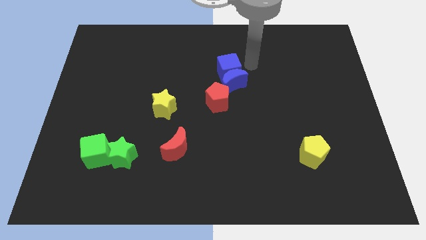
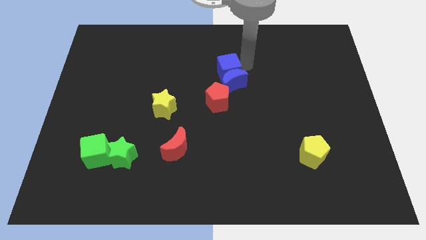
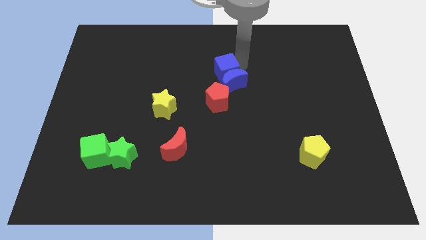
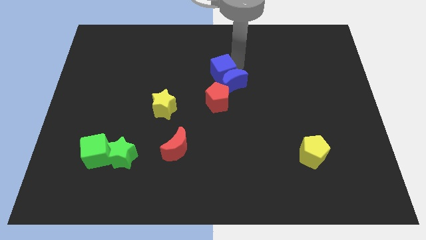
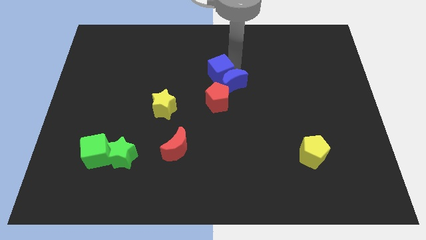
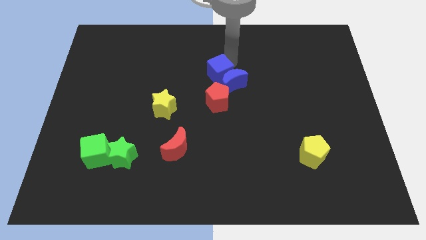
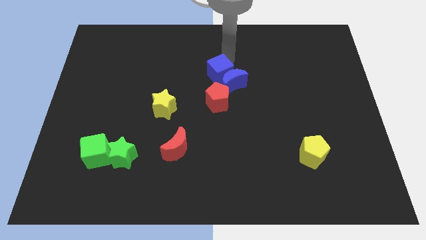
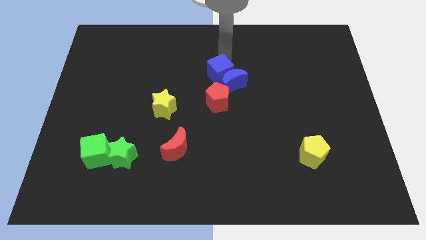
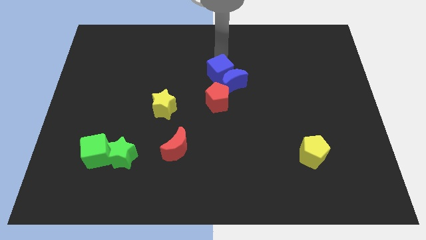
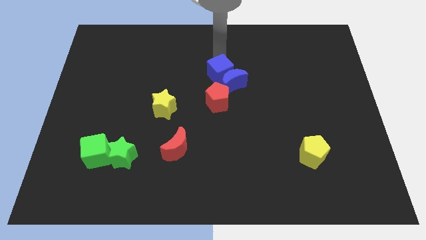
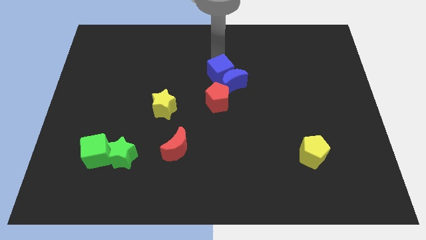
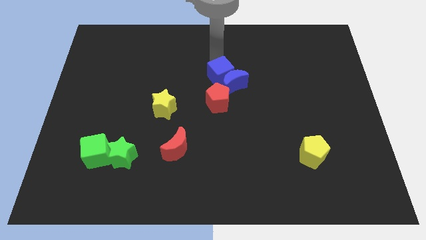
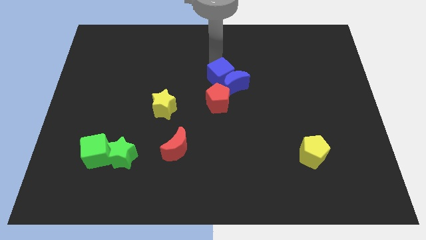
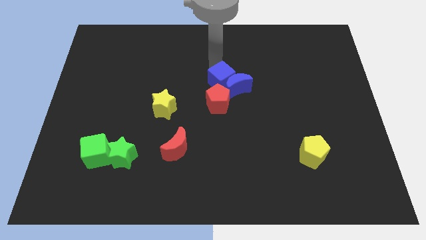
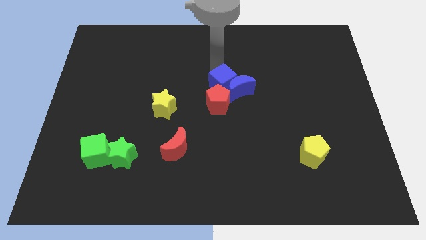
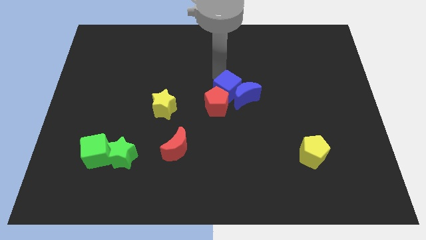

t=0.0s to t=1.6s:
push the blue cube into the top of the red pentagon

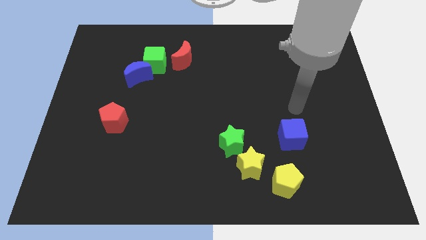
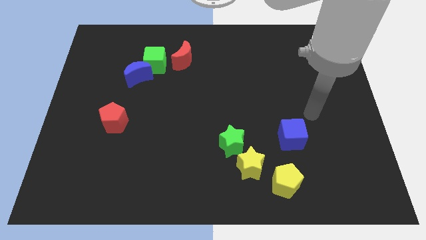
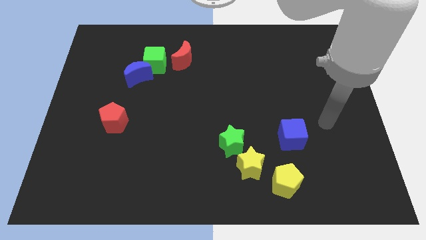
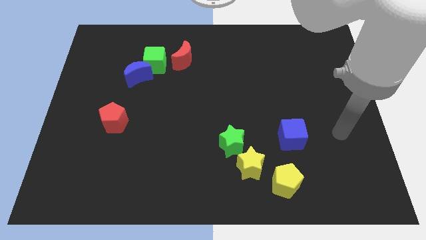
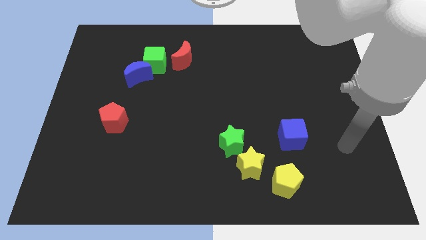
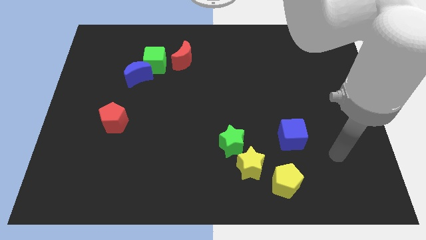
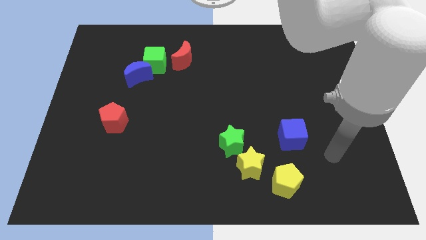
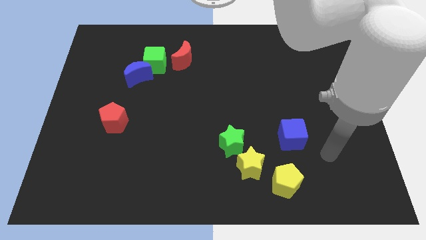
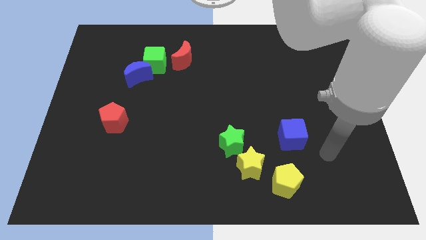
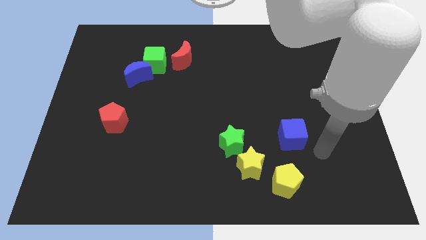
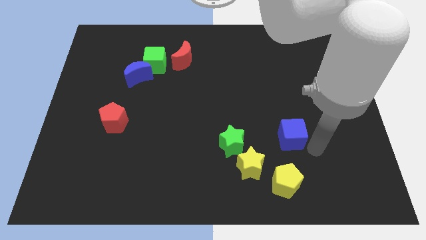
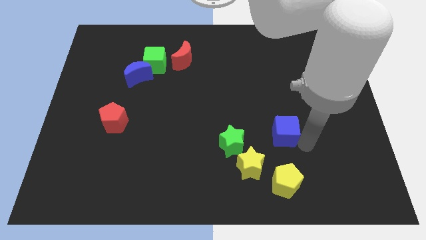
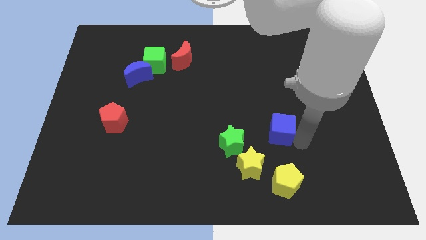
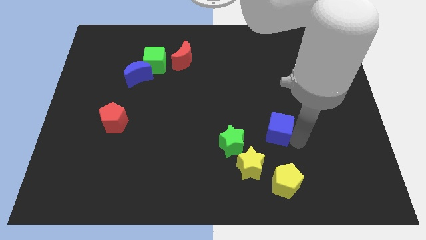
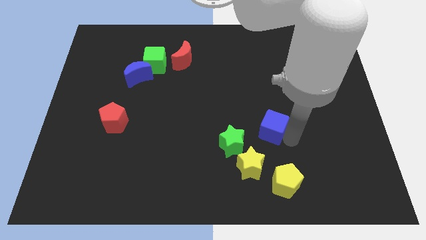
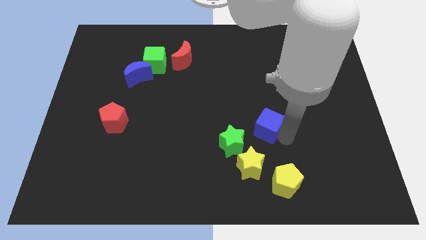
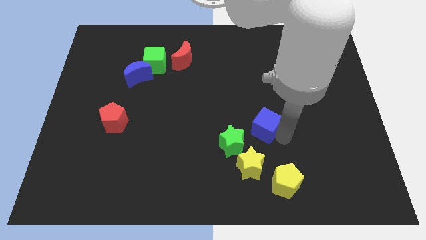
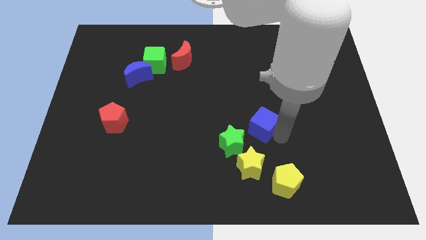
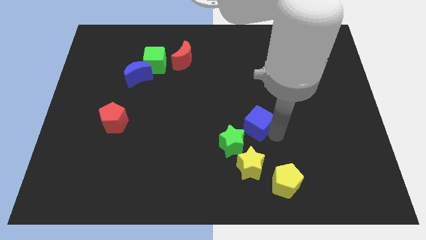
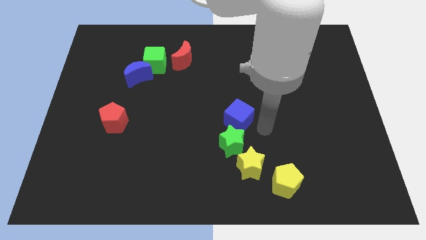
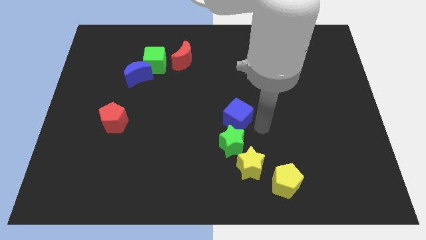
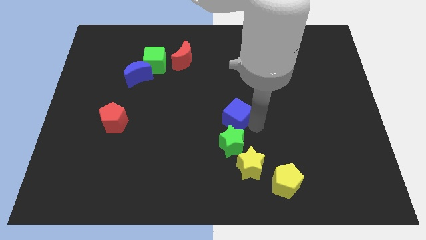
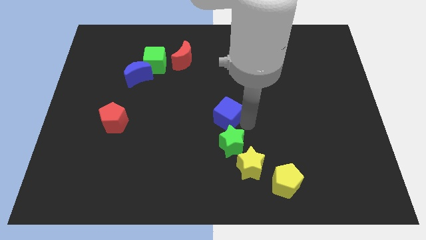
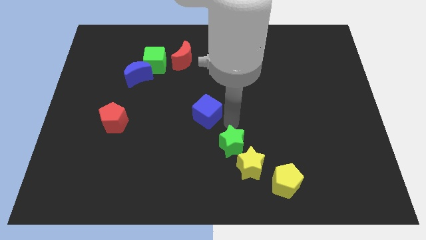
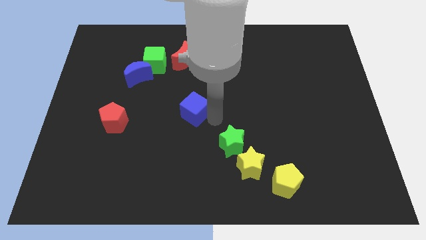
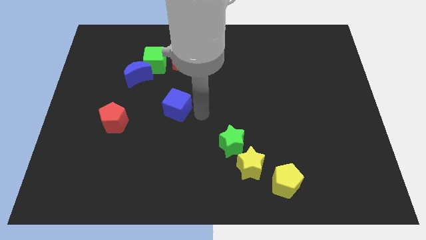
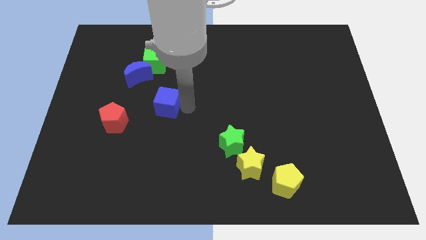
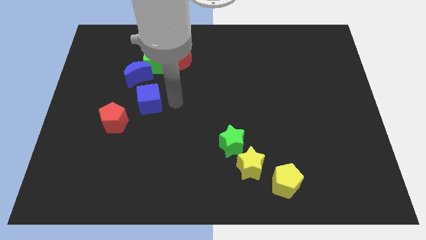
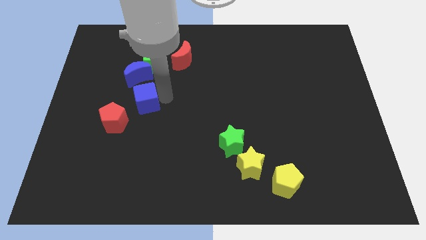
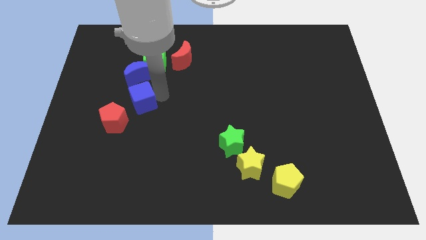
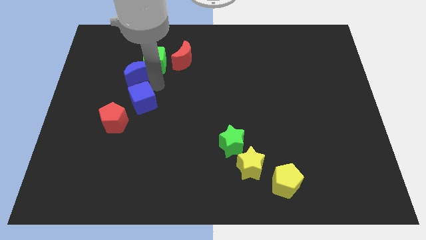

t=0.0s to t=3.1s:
push the blue cube to the bottom side of the blue crescent

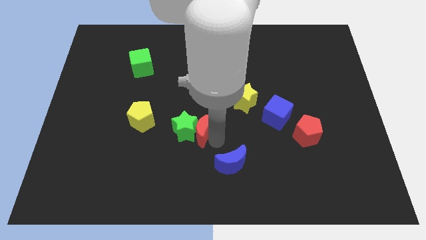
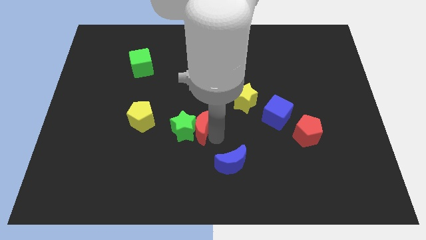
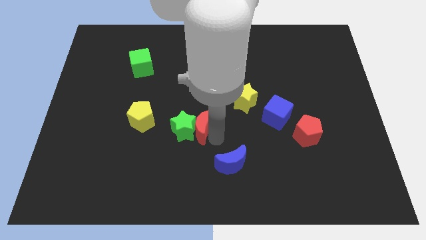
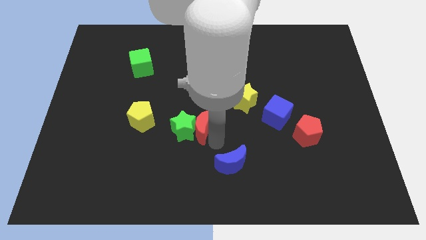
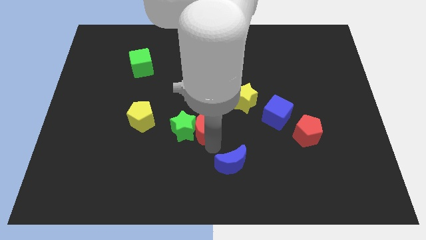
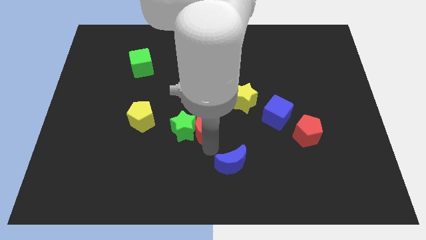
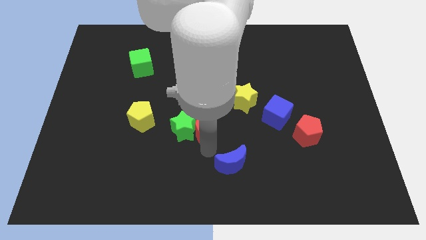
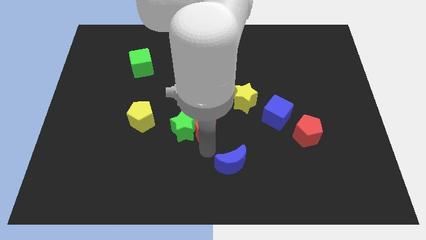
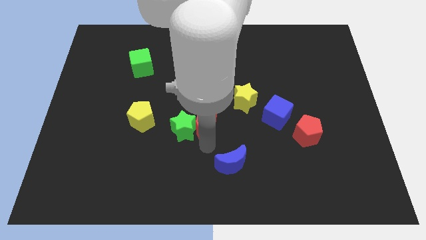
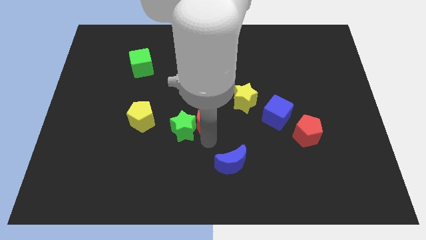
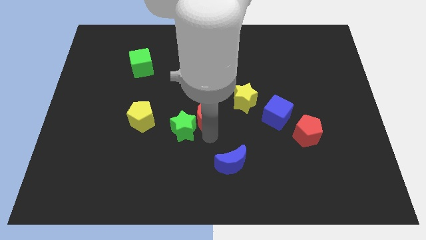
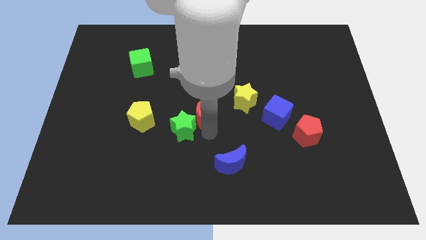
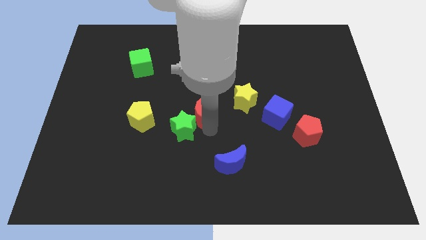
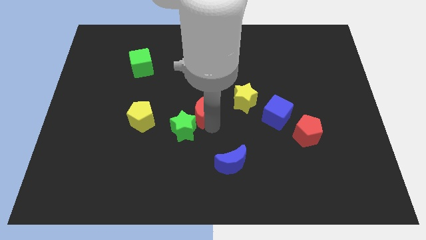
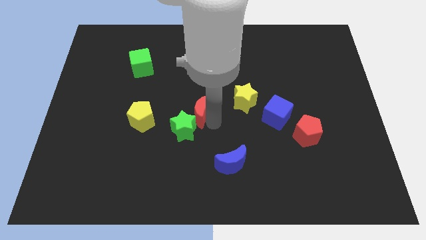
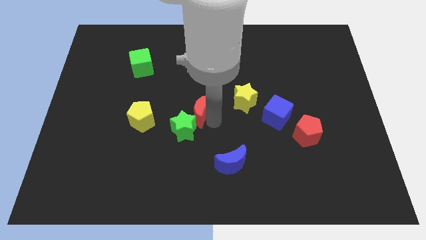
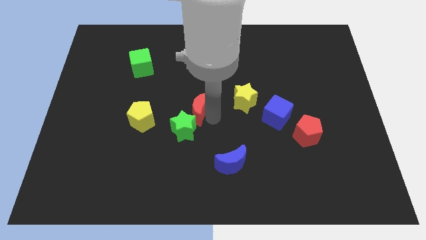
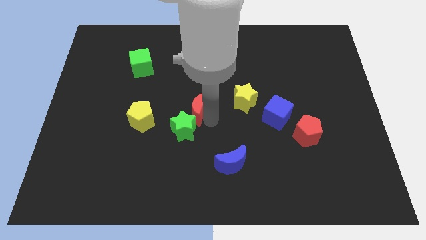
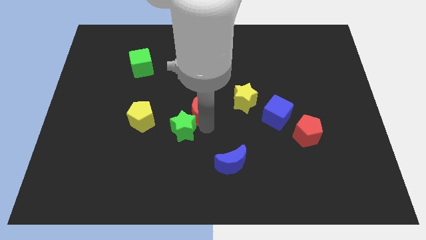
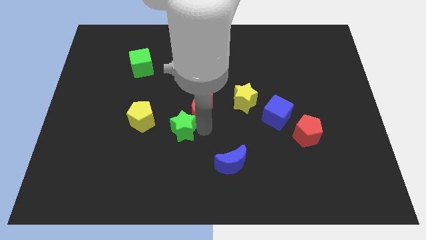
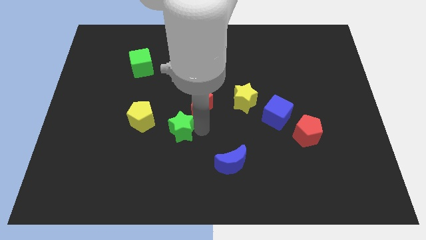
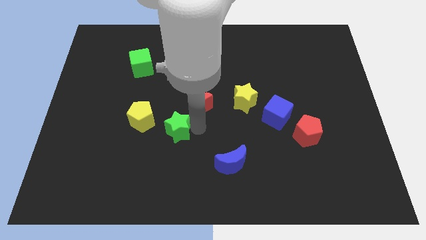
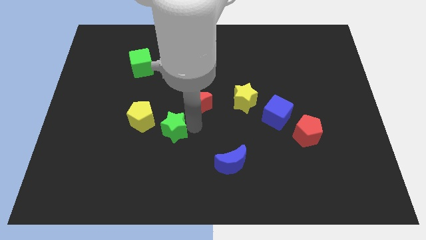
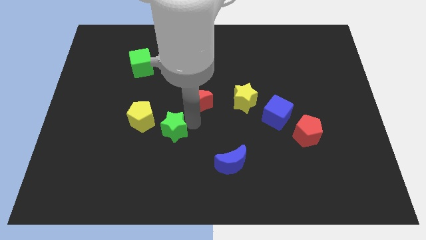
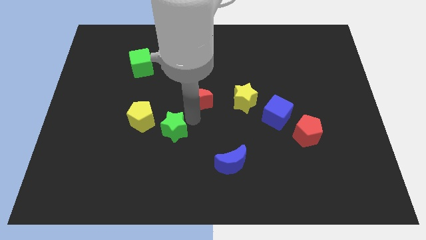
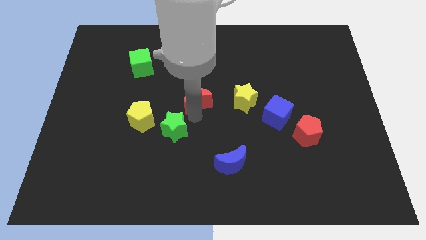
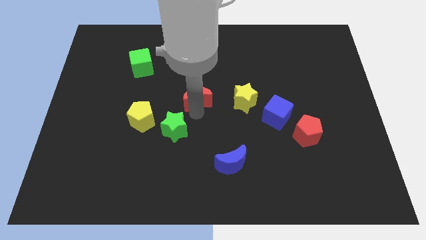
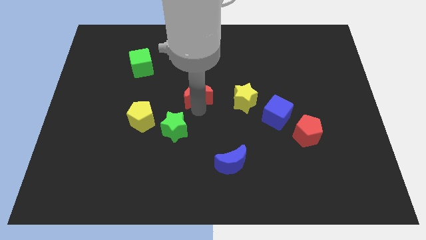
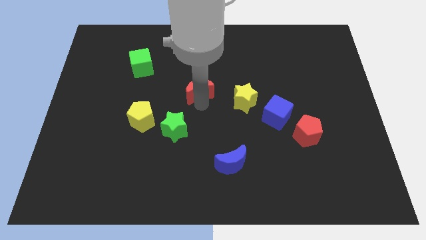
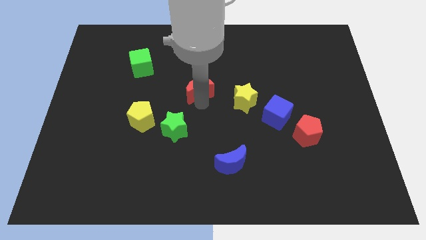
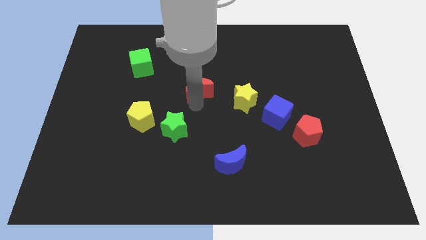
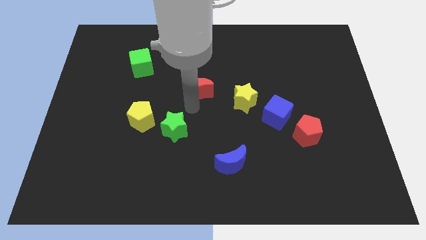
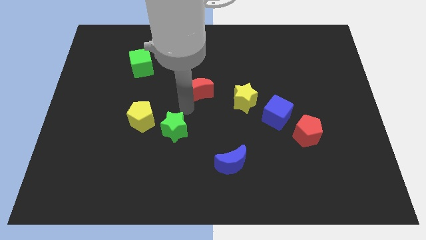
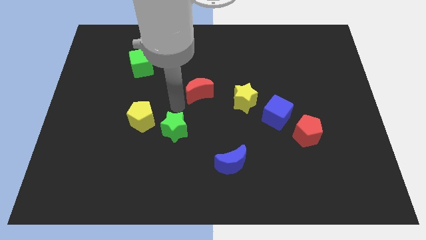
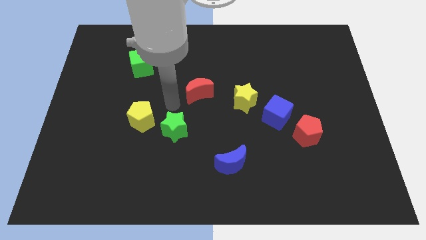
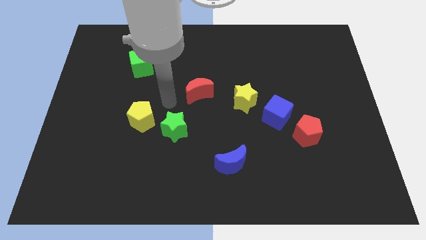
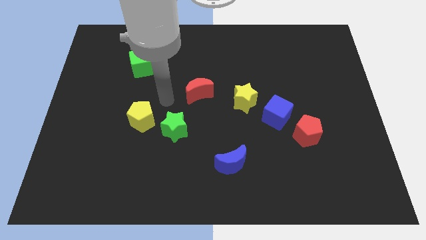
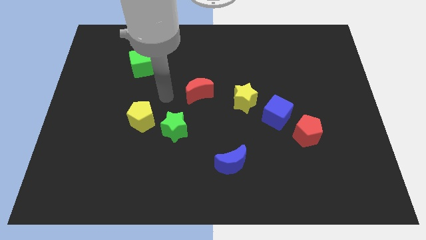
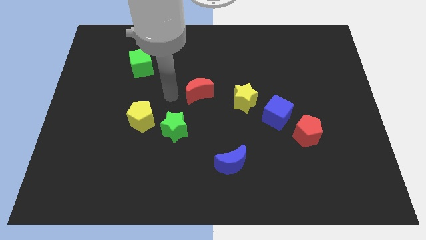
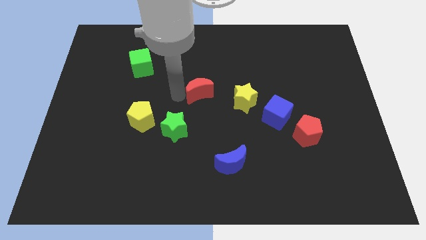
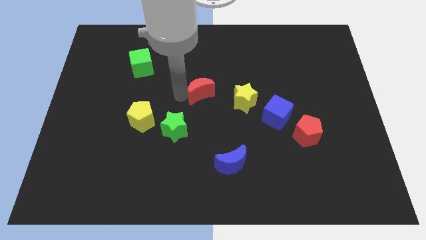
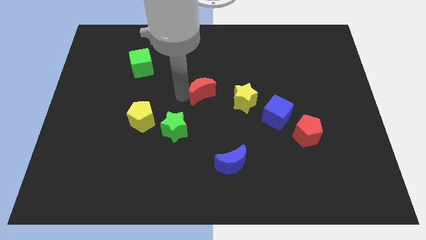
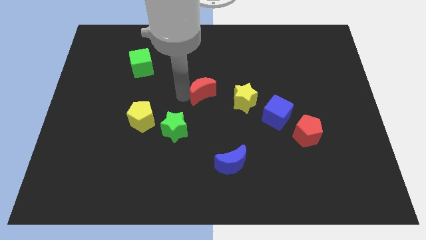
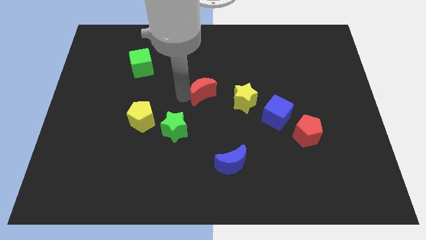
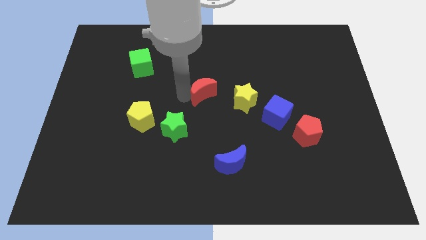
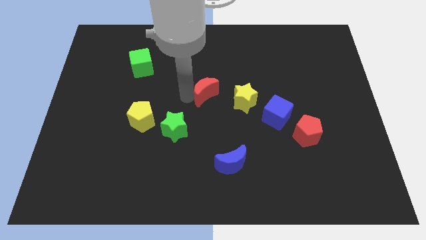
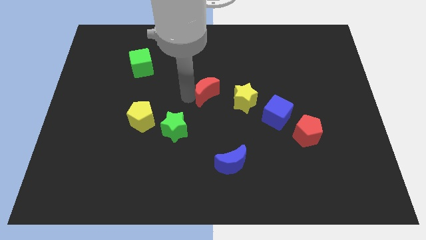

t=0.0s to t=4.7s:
move the red moon to the left of the yellow star
